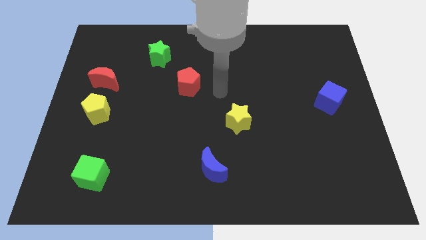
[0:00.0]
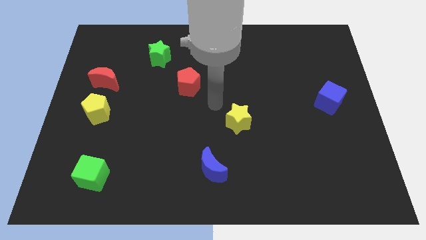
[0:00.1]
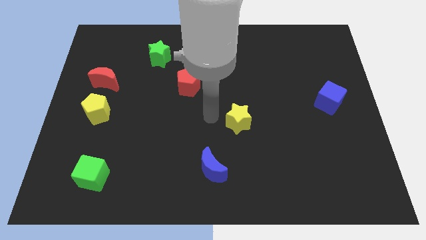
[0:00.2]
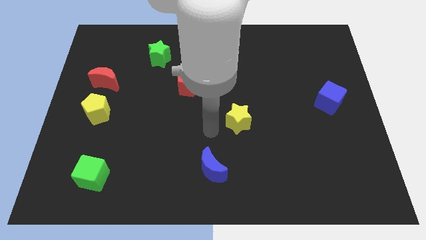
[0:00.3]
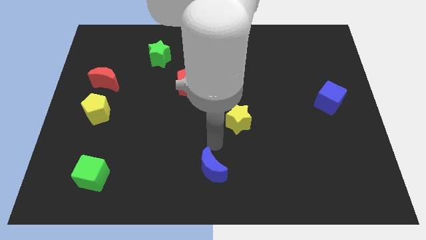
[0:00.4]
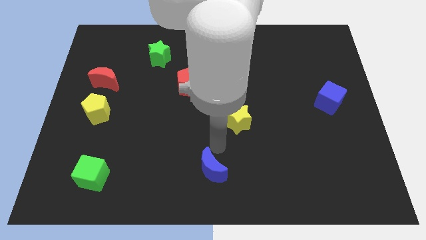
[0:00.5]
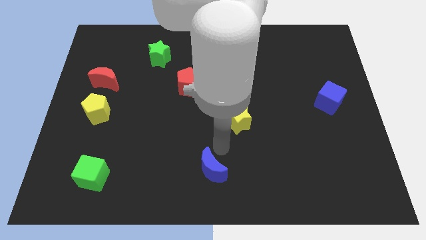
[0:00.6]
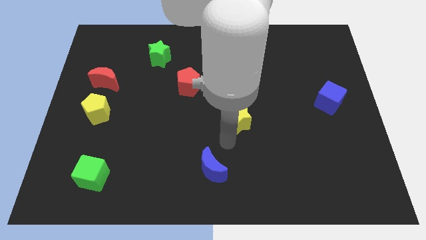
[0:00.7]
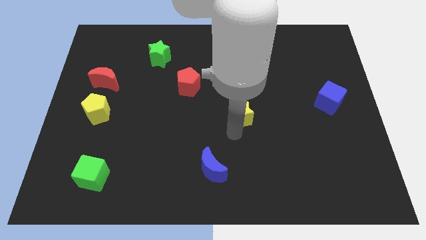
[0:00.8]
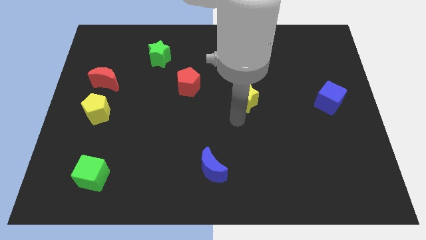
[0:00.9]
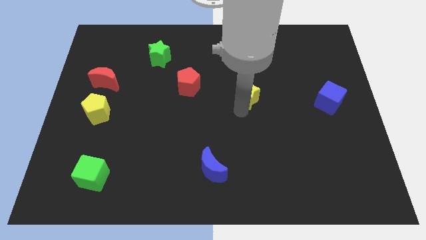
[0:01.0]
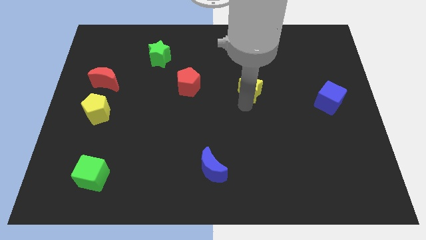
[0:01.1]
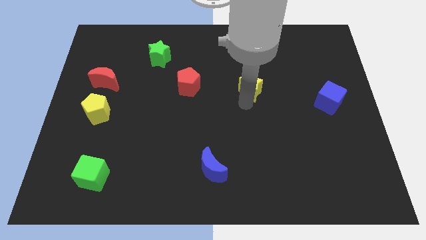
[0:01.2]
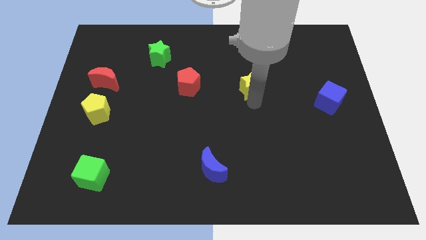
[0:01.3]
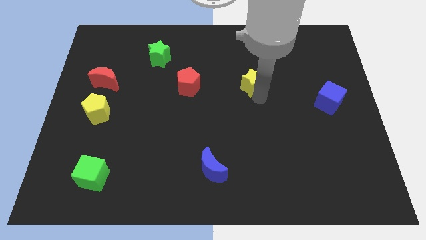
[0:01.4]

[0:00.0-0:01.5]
push yellow star to the right of red pentagon

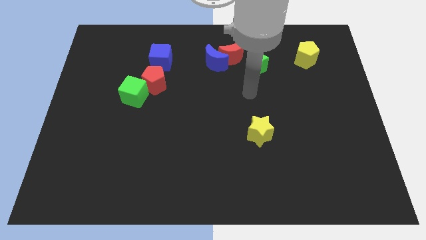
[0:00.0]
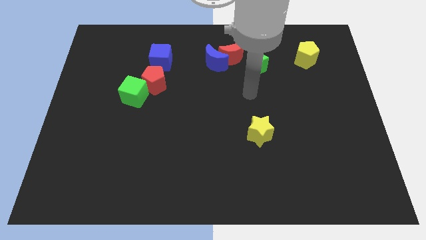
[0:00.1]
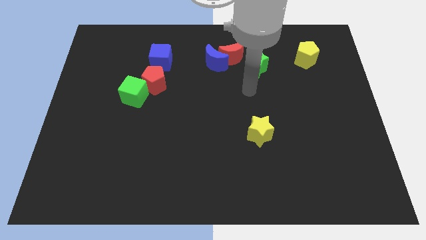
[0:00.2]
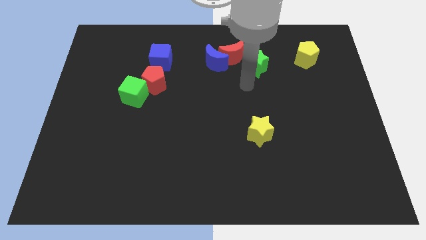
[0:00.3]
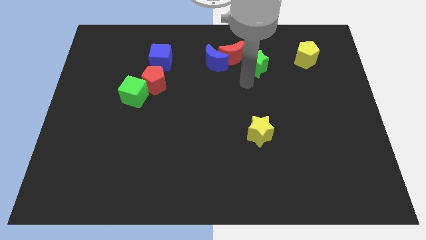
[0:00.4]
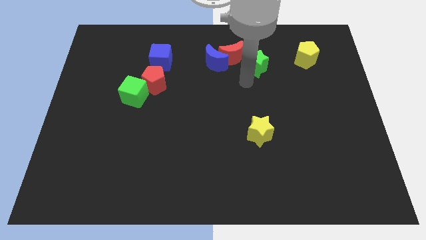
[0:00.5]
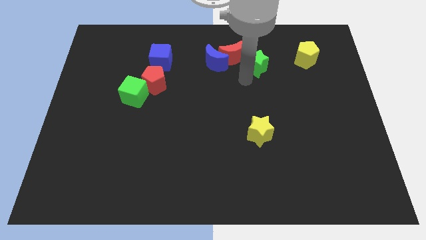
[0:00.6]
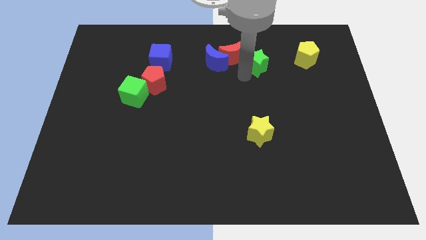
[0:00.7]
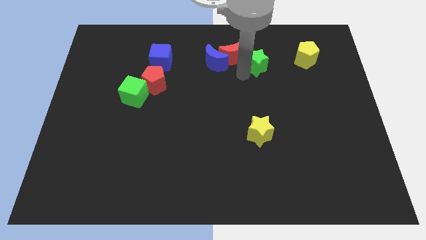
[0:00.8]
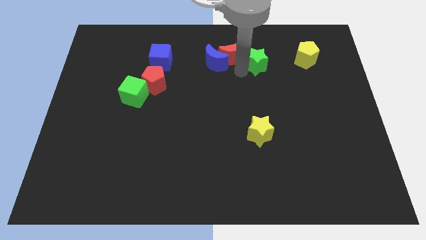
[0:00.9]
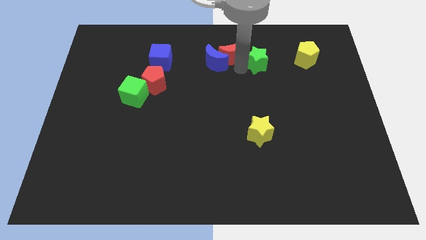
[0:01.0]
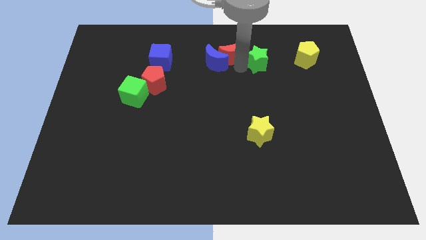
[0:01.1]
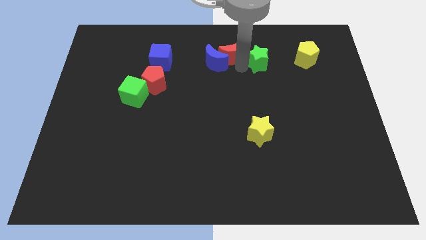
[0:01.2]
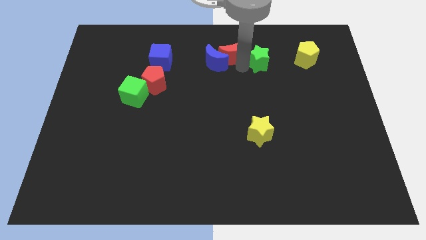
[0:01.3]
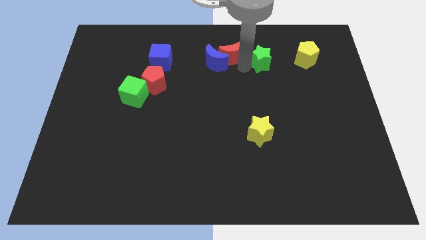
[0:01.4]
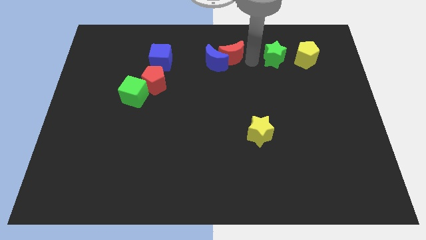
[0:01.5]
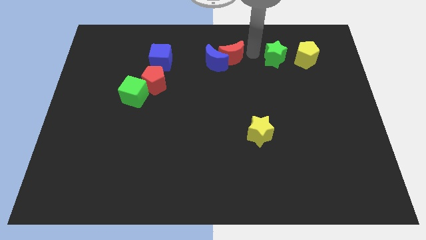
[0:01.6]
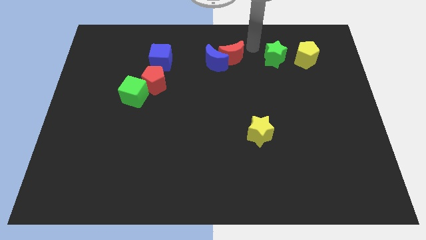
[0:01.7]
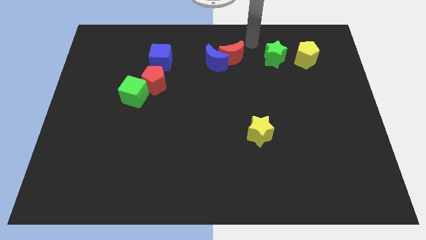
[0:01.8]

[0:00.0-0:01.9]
push green star slightly towards the yellow pentagon

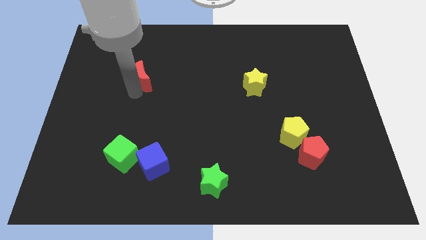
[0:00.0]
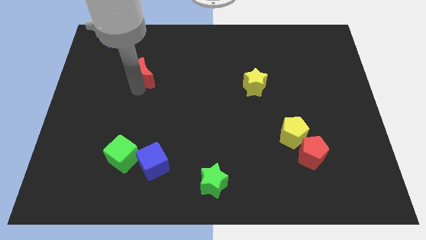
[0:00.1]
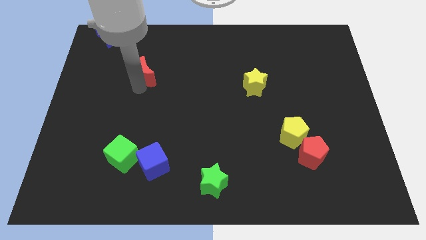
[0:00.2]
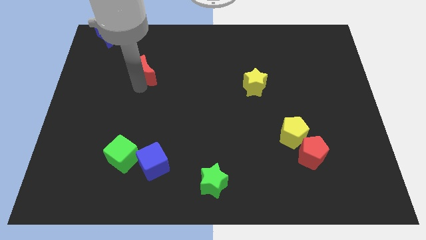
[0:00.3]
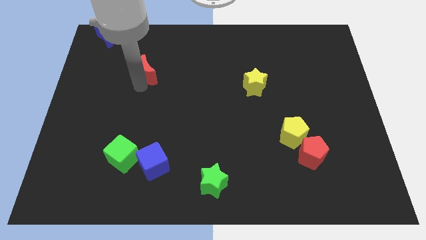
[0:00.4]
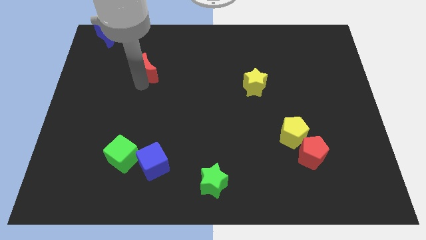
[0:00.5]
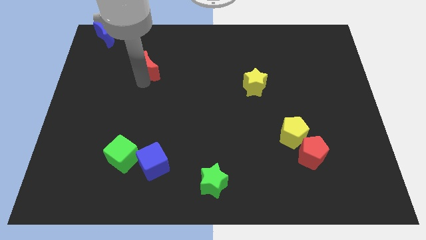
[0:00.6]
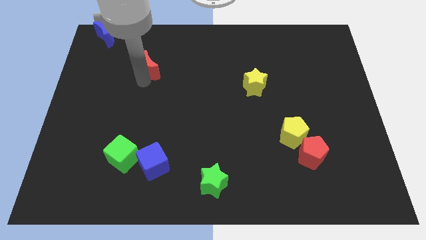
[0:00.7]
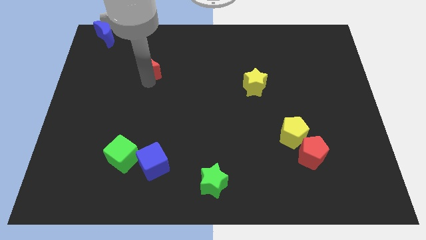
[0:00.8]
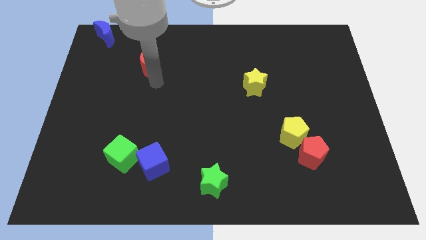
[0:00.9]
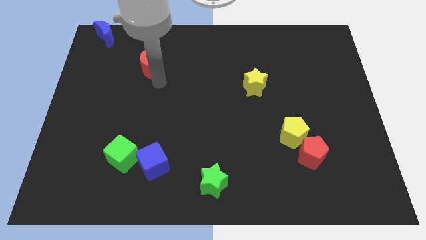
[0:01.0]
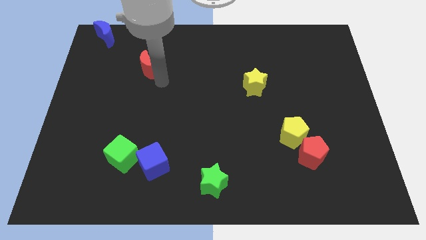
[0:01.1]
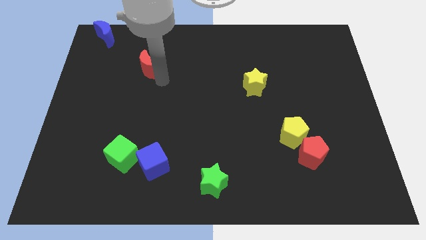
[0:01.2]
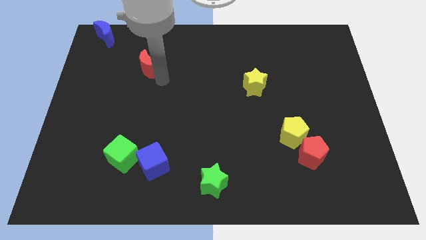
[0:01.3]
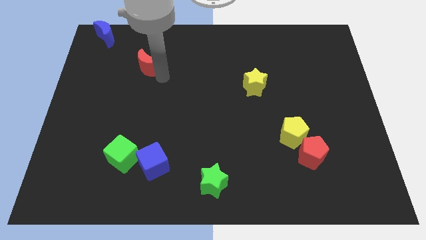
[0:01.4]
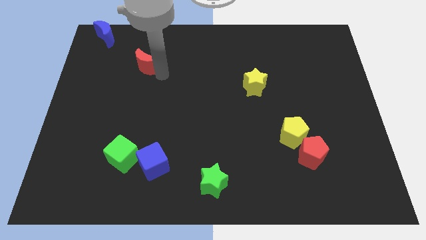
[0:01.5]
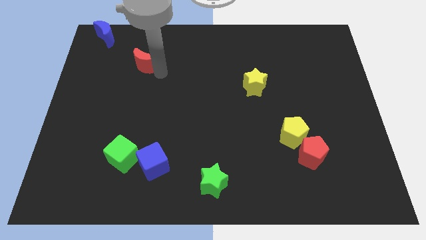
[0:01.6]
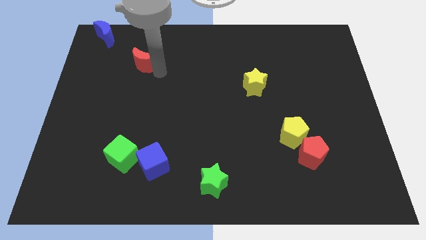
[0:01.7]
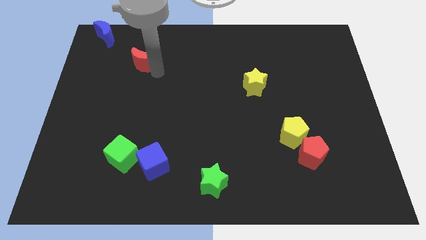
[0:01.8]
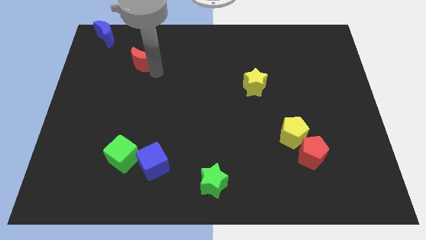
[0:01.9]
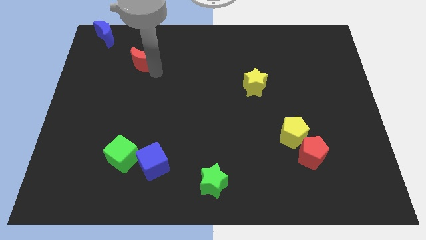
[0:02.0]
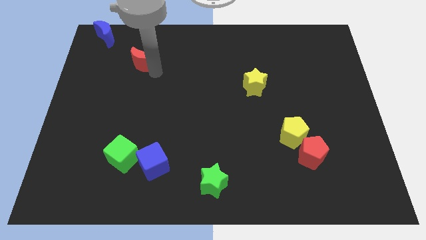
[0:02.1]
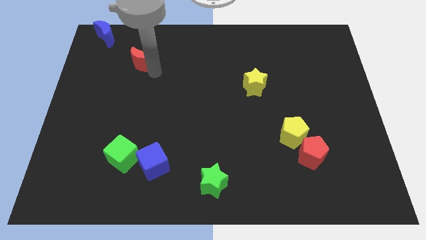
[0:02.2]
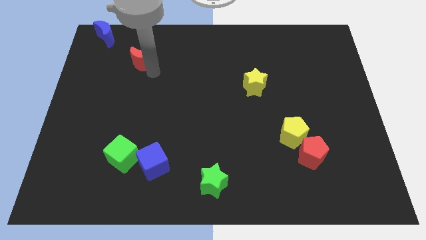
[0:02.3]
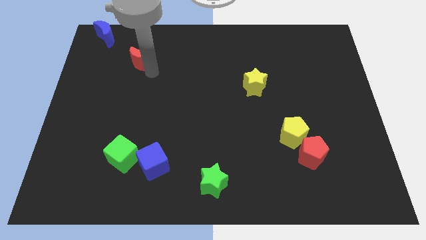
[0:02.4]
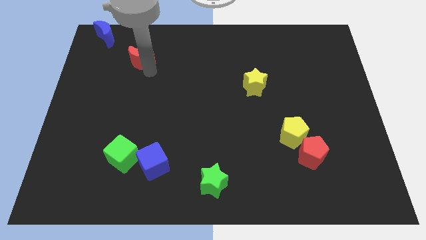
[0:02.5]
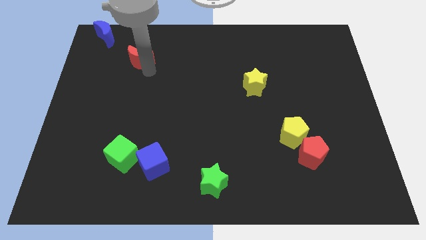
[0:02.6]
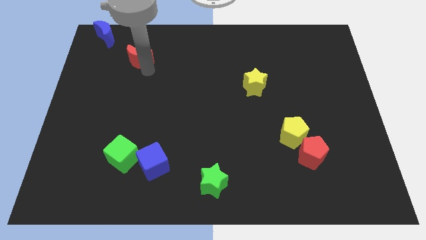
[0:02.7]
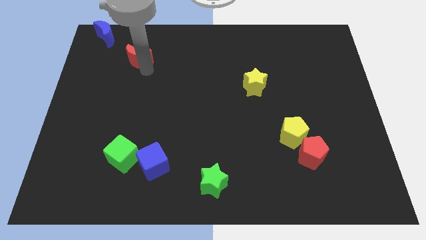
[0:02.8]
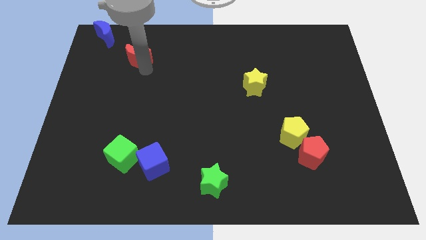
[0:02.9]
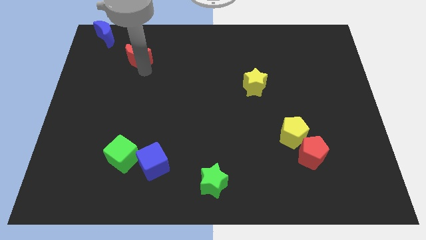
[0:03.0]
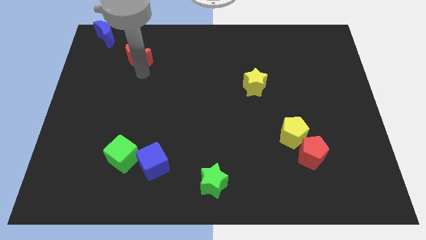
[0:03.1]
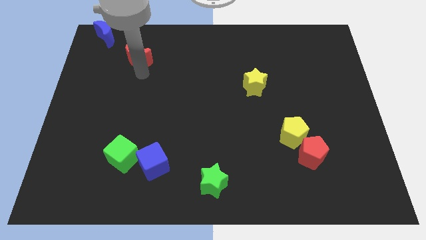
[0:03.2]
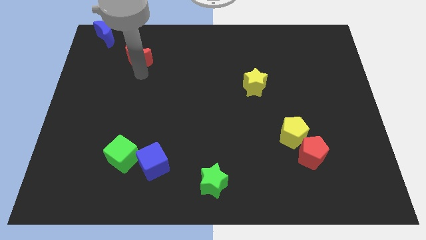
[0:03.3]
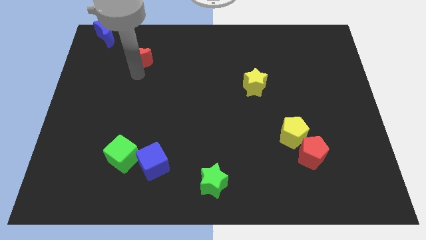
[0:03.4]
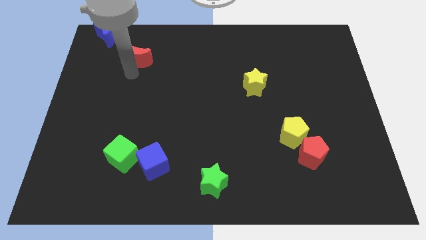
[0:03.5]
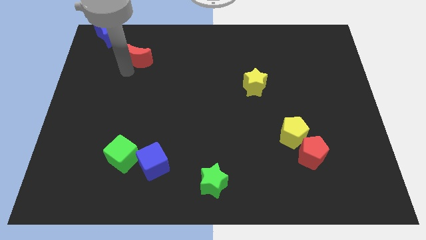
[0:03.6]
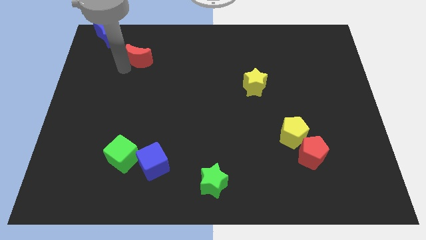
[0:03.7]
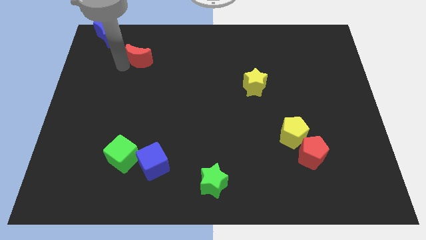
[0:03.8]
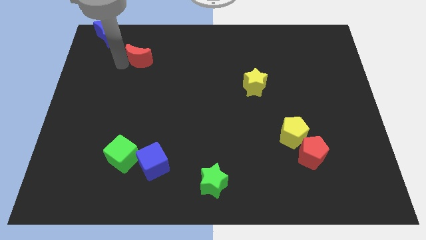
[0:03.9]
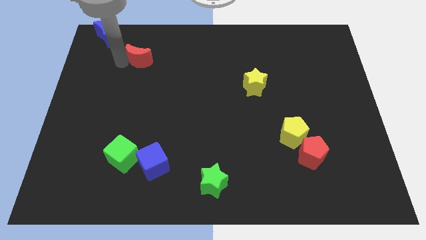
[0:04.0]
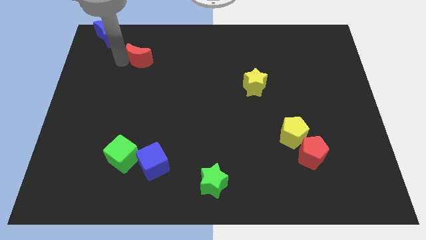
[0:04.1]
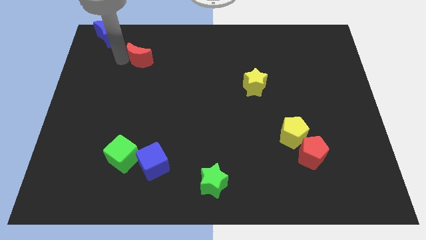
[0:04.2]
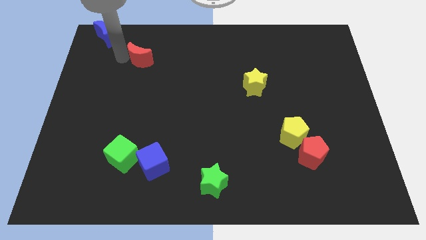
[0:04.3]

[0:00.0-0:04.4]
place red moon on bottom right of blue moon

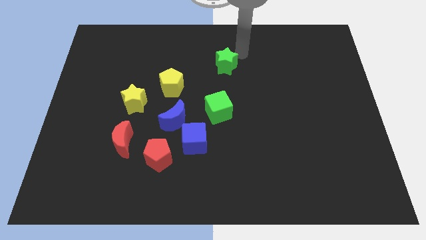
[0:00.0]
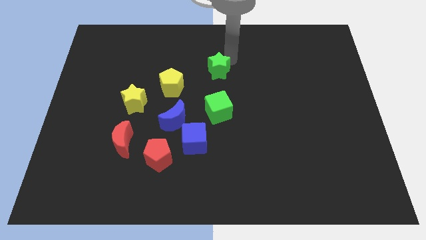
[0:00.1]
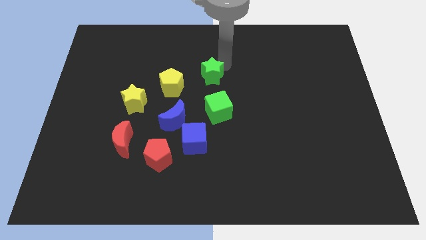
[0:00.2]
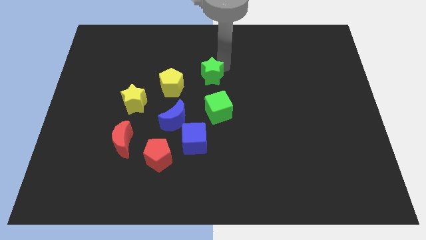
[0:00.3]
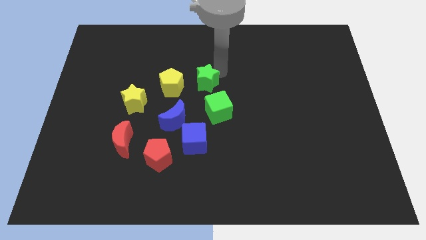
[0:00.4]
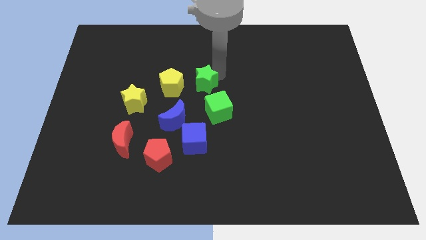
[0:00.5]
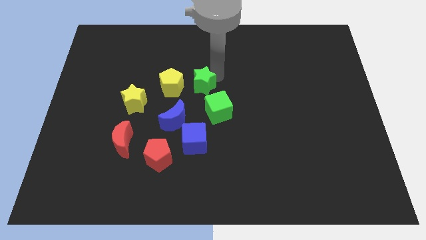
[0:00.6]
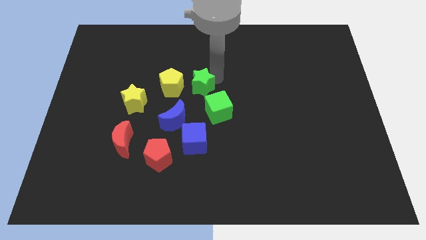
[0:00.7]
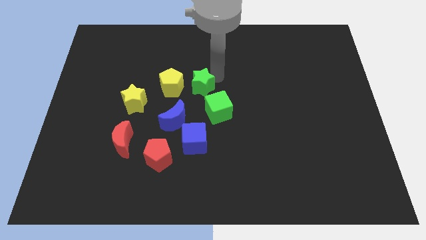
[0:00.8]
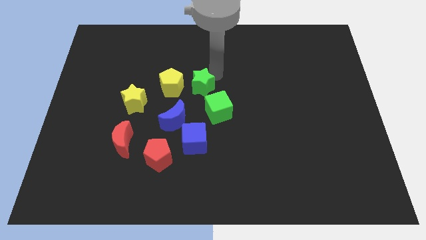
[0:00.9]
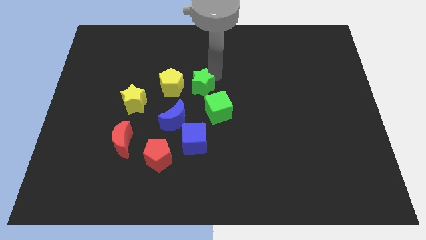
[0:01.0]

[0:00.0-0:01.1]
drag the green star into the group of the blocks
